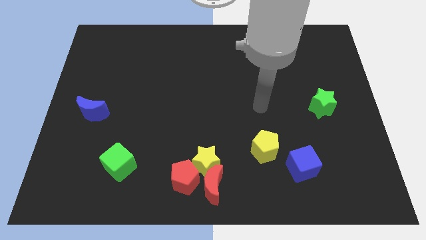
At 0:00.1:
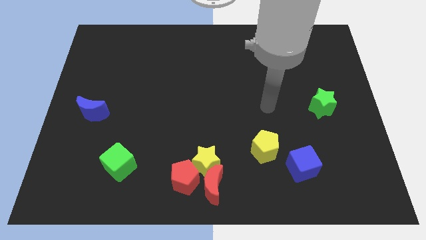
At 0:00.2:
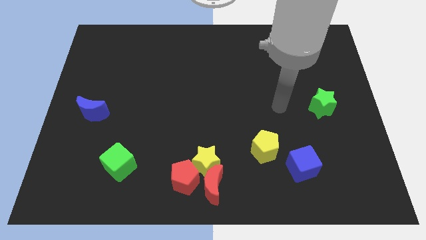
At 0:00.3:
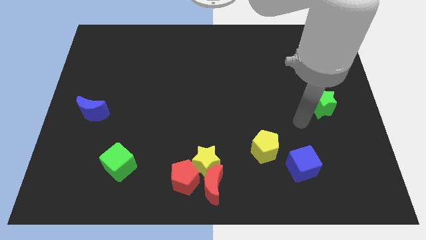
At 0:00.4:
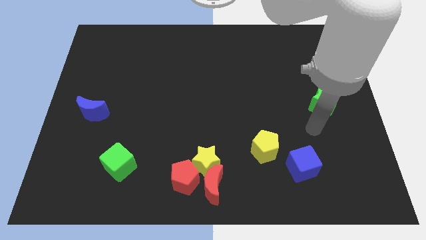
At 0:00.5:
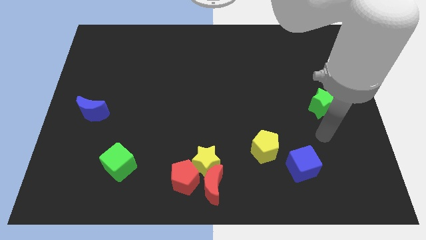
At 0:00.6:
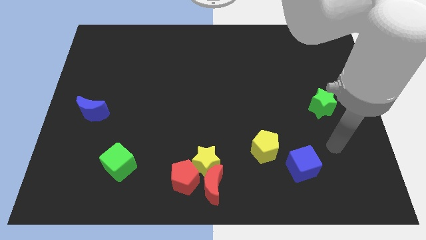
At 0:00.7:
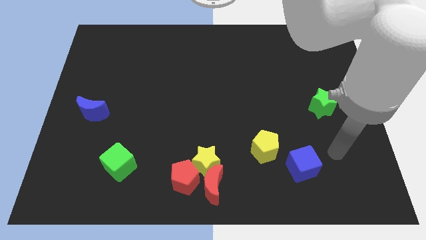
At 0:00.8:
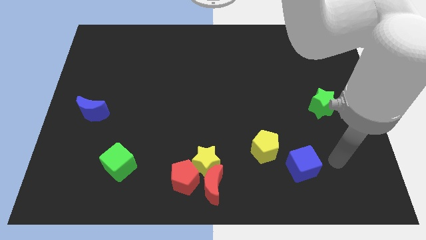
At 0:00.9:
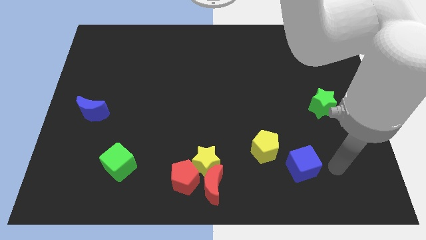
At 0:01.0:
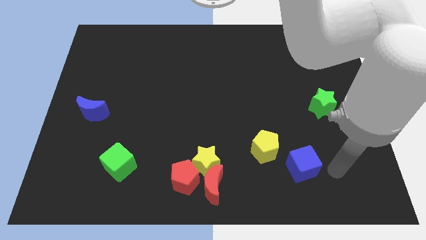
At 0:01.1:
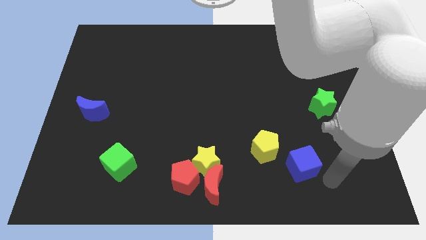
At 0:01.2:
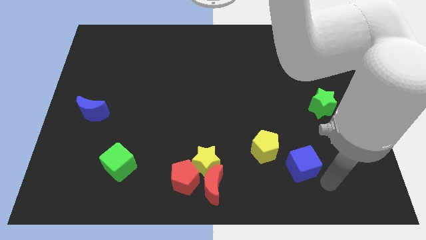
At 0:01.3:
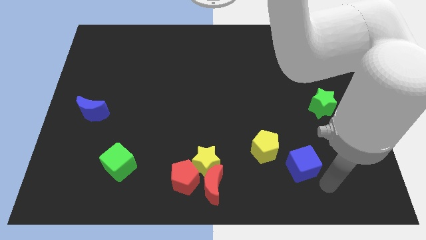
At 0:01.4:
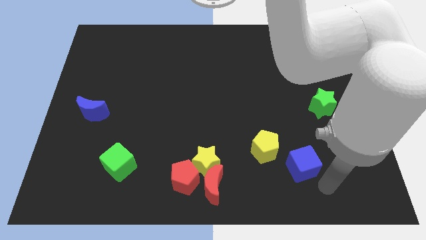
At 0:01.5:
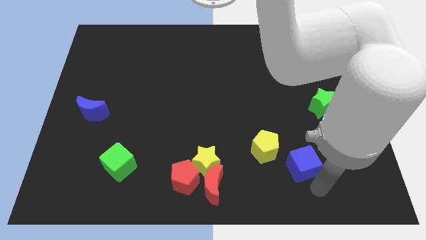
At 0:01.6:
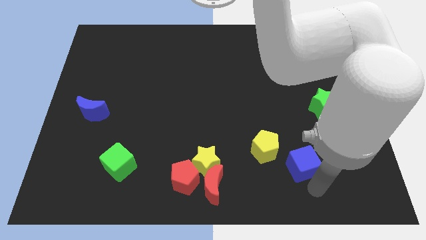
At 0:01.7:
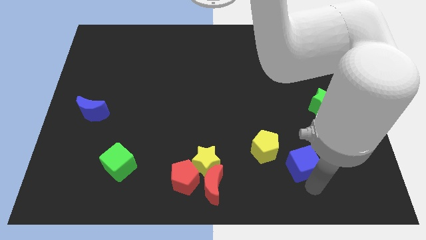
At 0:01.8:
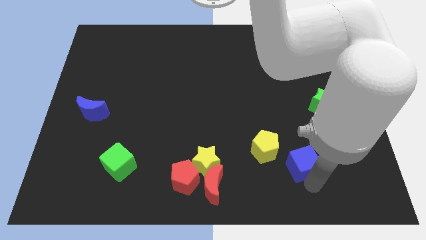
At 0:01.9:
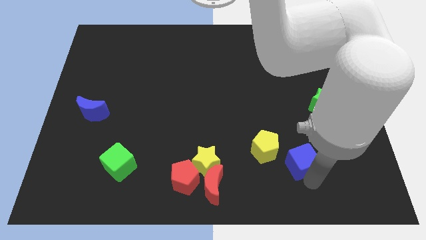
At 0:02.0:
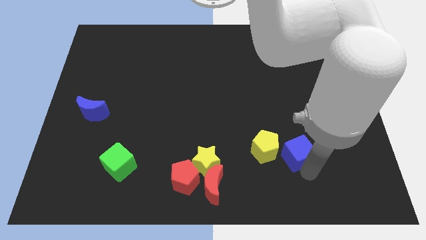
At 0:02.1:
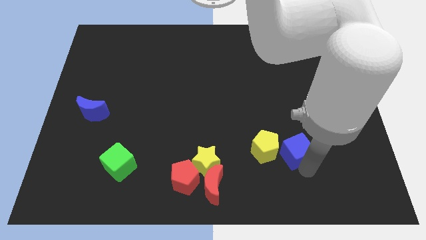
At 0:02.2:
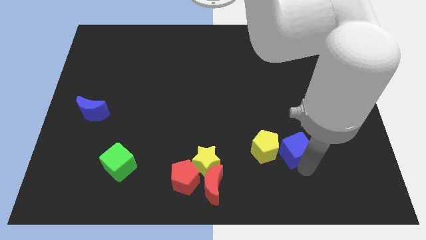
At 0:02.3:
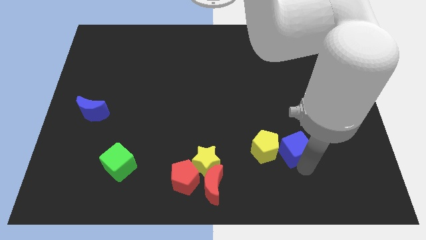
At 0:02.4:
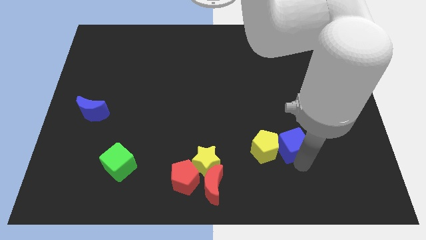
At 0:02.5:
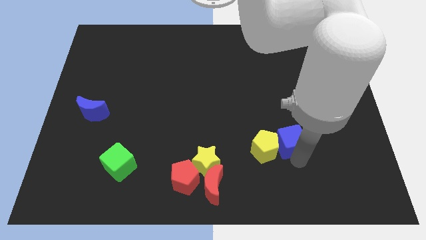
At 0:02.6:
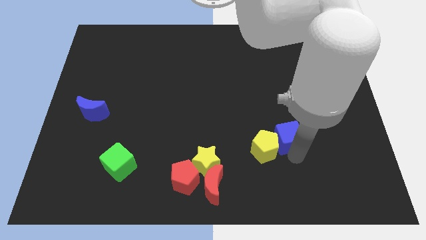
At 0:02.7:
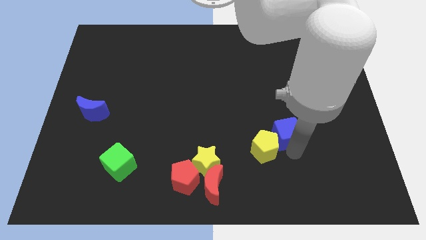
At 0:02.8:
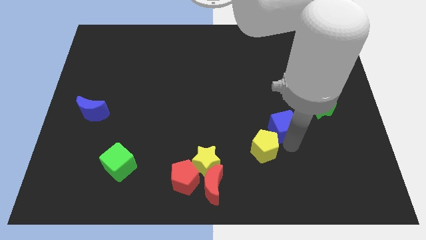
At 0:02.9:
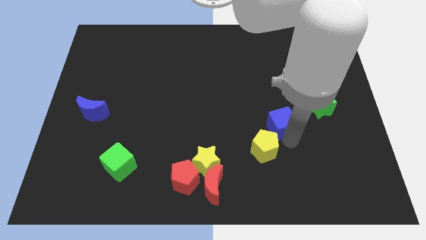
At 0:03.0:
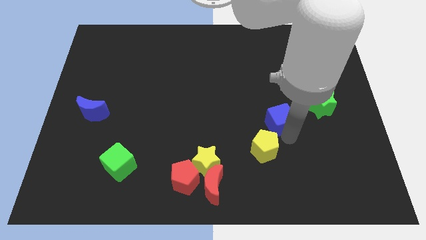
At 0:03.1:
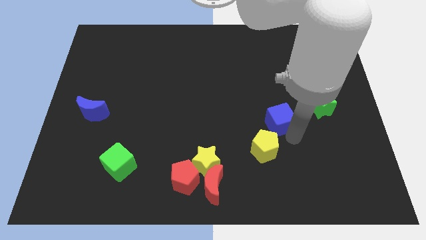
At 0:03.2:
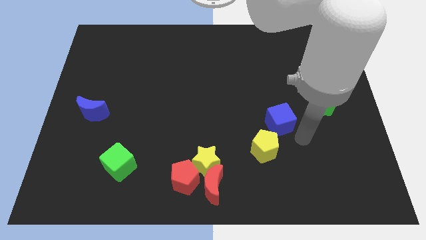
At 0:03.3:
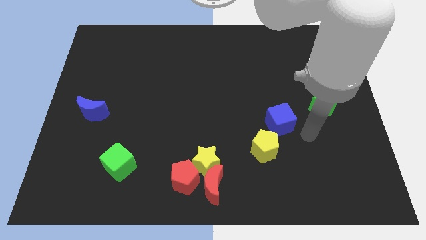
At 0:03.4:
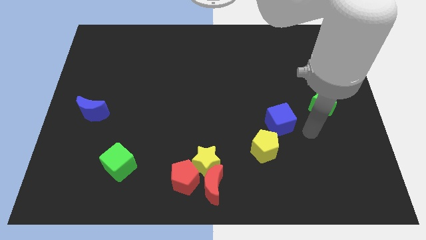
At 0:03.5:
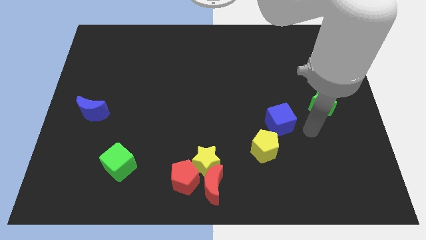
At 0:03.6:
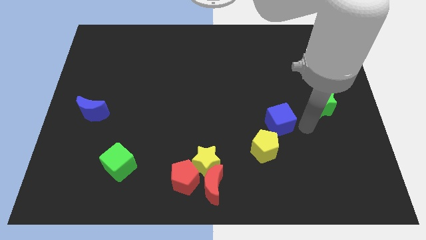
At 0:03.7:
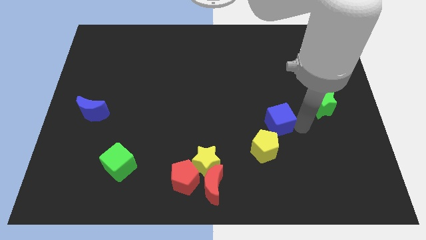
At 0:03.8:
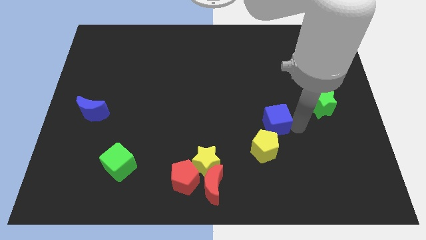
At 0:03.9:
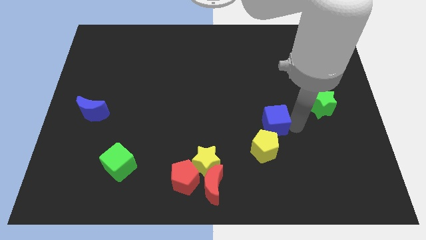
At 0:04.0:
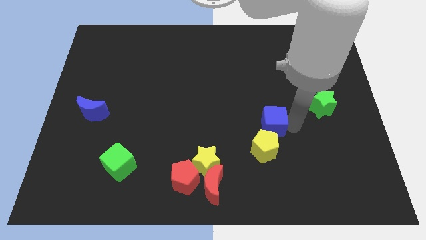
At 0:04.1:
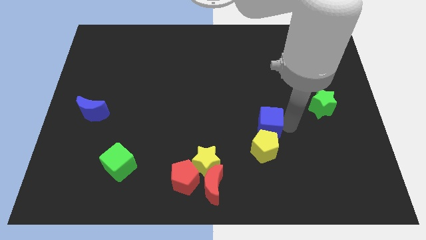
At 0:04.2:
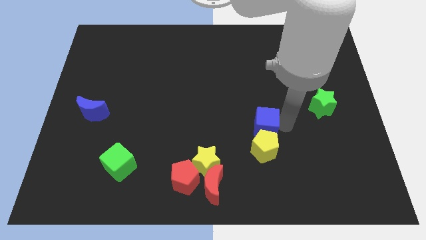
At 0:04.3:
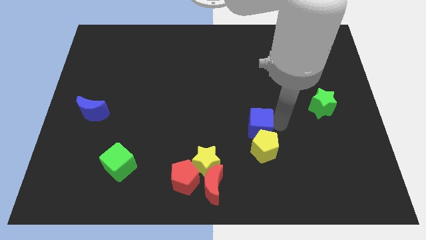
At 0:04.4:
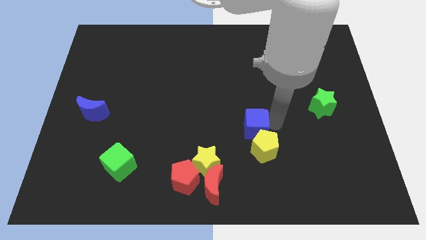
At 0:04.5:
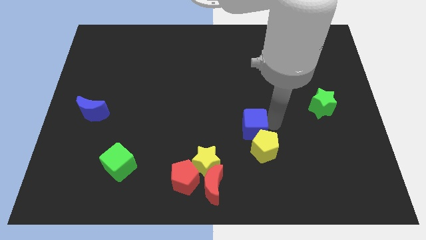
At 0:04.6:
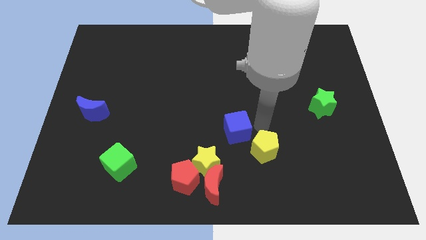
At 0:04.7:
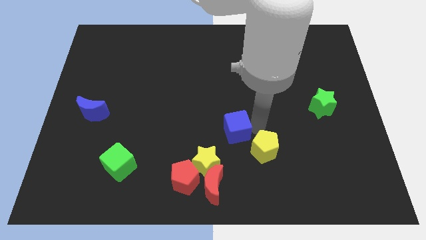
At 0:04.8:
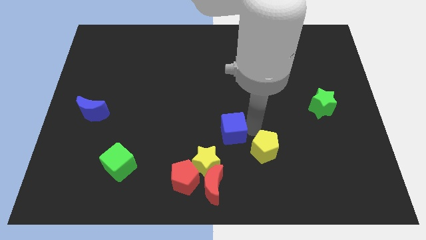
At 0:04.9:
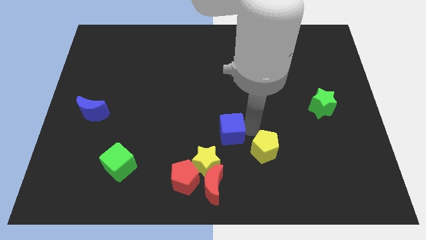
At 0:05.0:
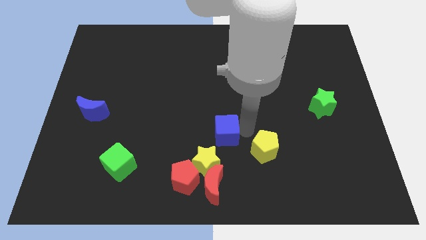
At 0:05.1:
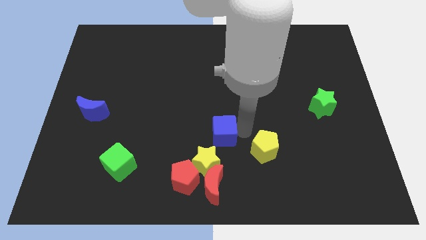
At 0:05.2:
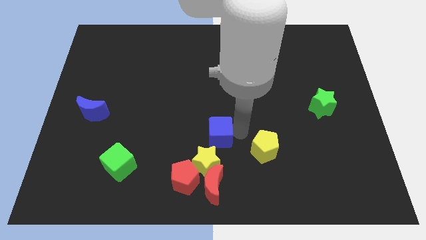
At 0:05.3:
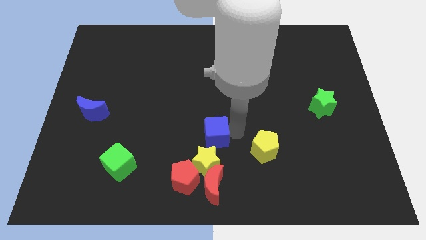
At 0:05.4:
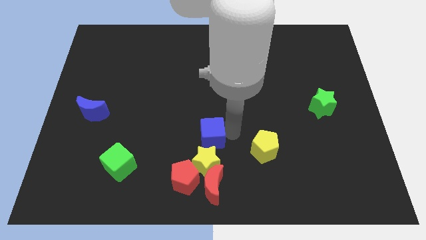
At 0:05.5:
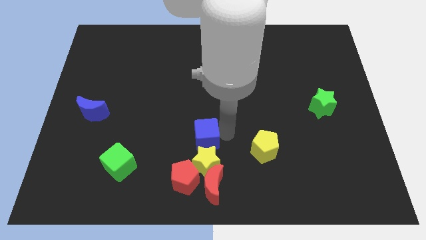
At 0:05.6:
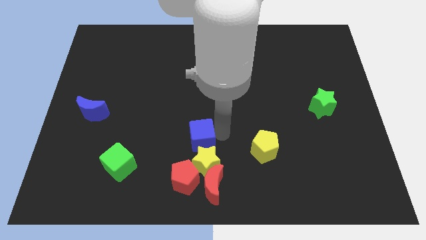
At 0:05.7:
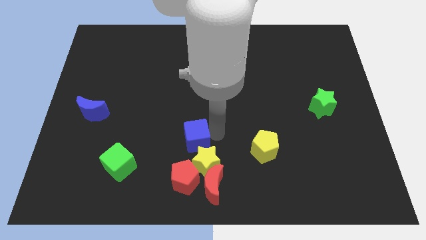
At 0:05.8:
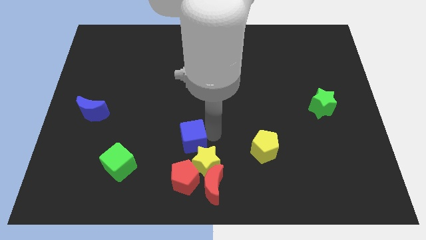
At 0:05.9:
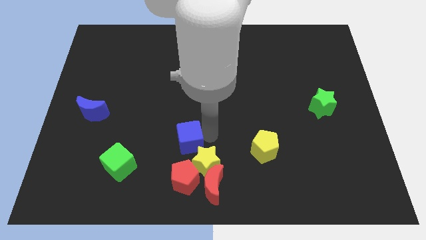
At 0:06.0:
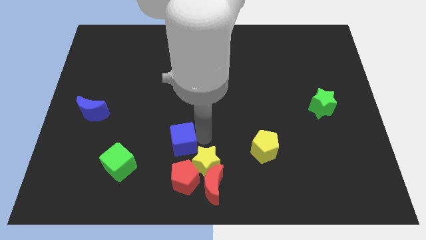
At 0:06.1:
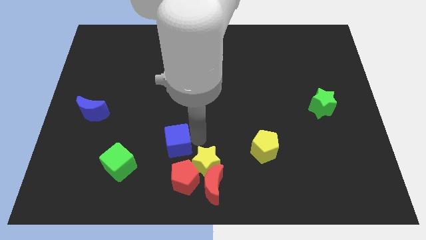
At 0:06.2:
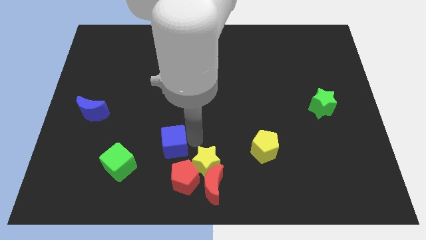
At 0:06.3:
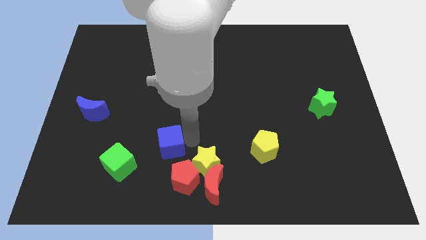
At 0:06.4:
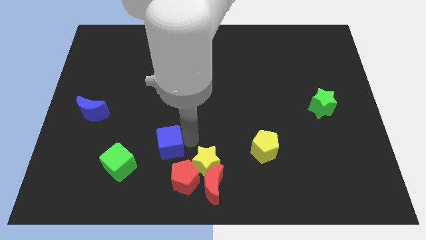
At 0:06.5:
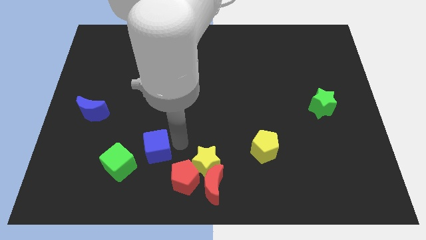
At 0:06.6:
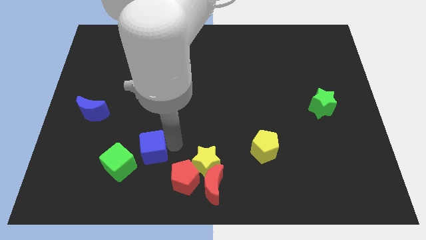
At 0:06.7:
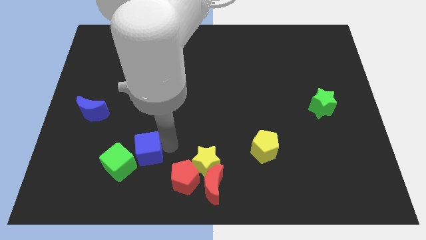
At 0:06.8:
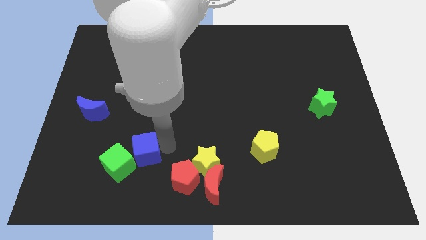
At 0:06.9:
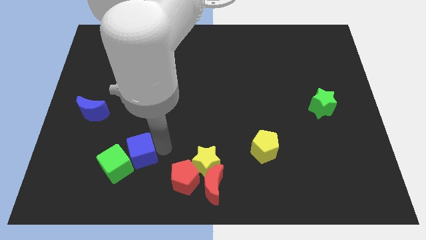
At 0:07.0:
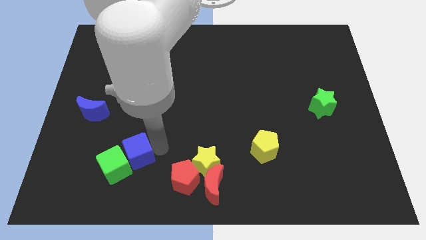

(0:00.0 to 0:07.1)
move the blue cube to the green cube

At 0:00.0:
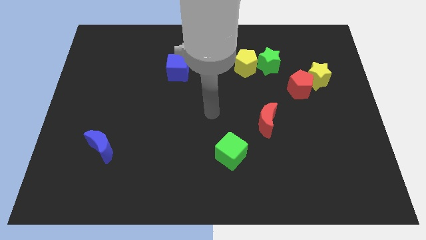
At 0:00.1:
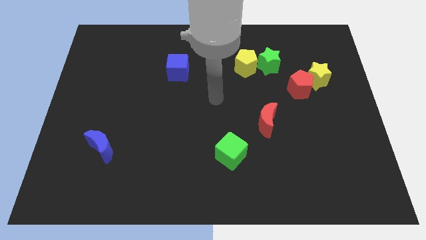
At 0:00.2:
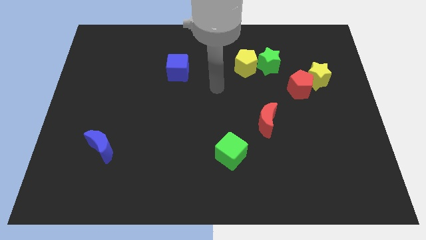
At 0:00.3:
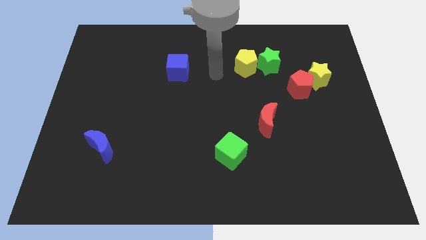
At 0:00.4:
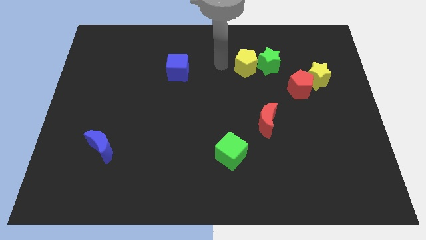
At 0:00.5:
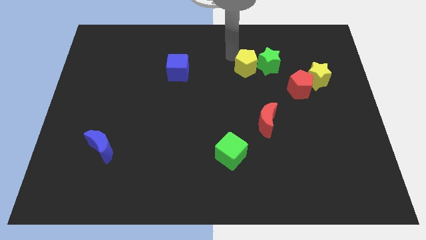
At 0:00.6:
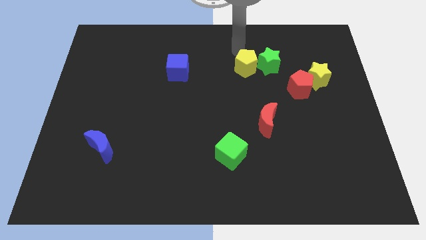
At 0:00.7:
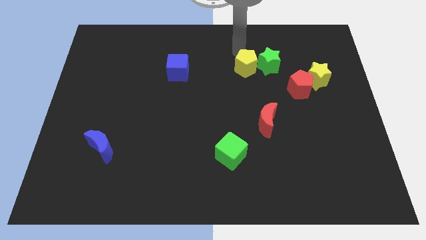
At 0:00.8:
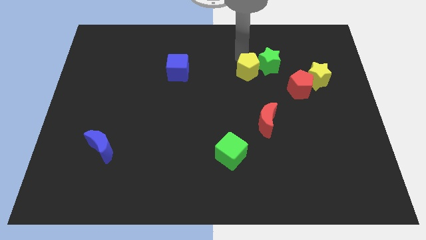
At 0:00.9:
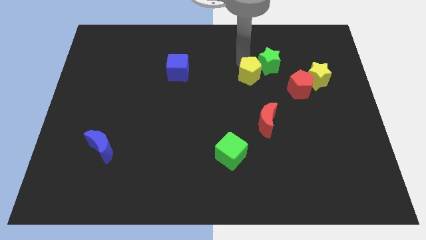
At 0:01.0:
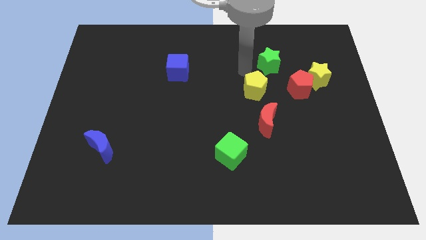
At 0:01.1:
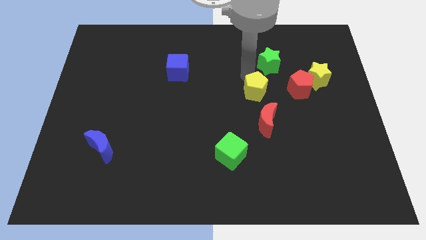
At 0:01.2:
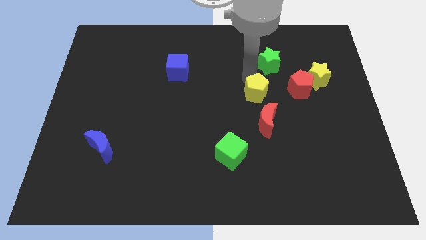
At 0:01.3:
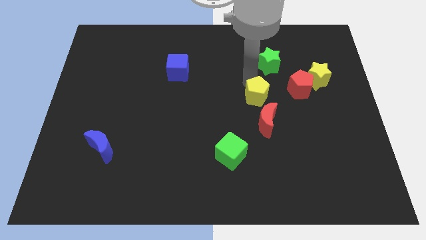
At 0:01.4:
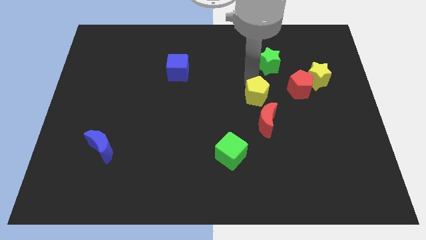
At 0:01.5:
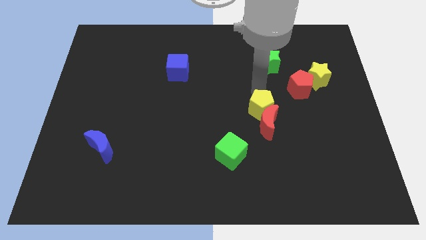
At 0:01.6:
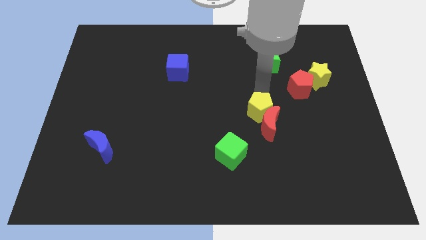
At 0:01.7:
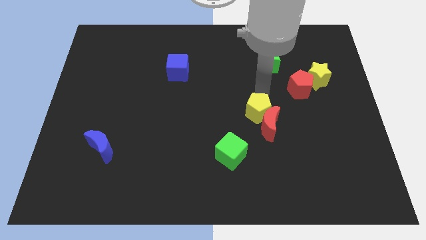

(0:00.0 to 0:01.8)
push the yellow pentagon next to the red moon
